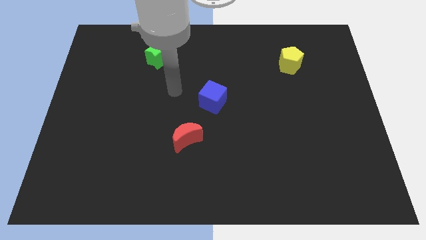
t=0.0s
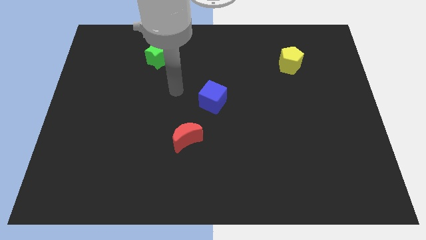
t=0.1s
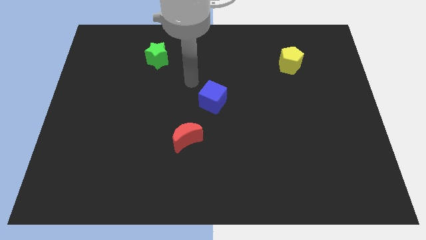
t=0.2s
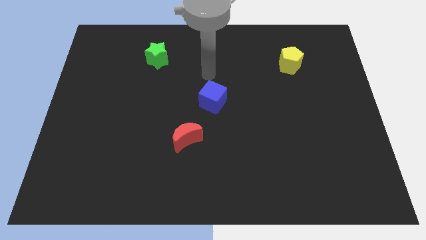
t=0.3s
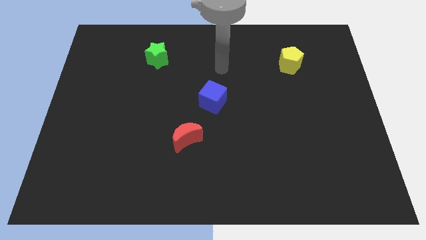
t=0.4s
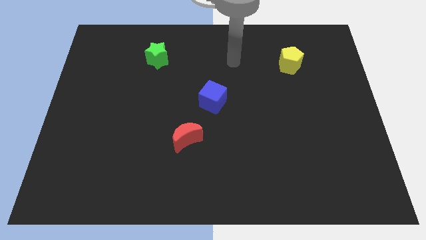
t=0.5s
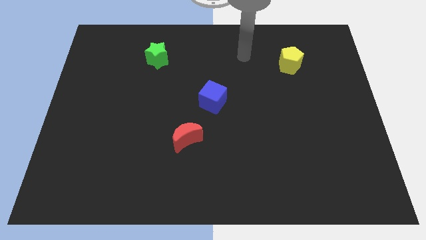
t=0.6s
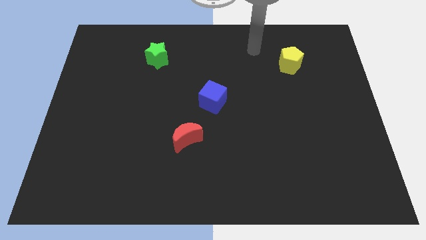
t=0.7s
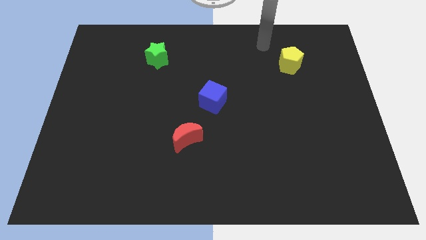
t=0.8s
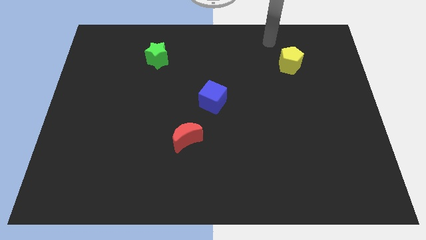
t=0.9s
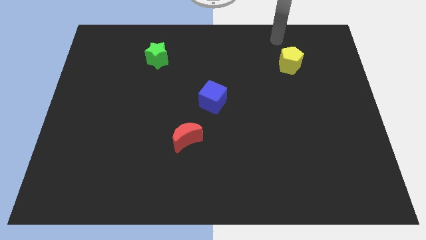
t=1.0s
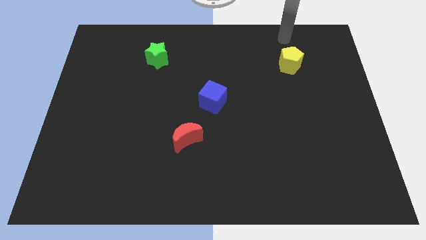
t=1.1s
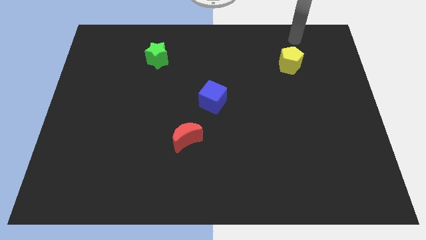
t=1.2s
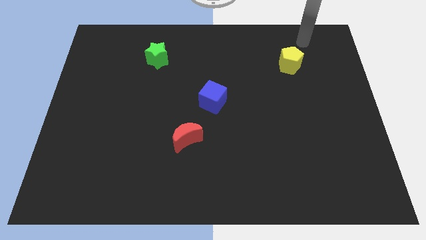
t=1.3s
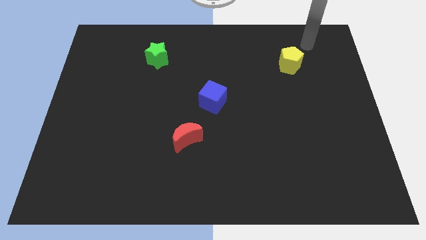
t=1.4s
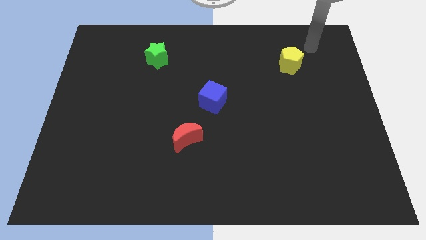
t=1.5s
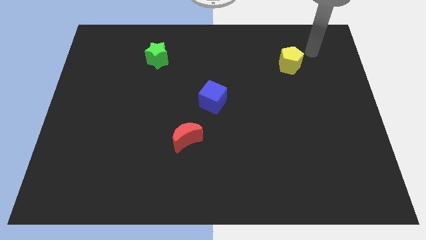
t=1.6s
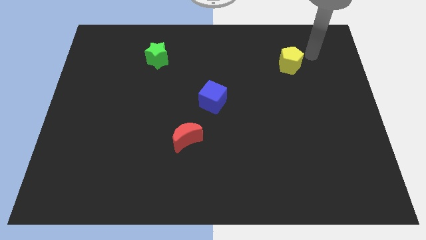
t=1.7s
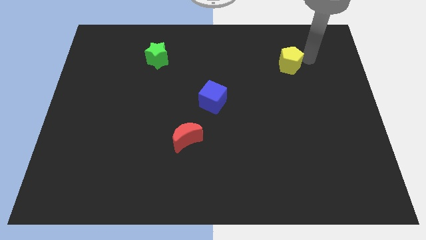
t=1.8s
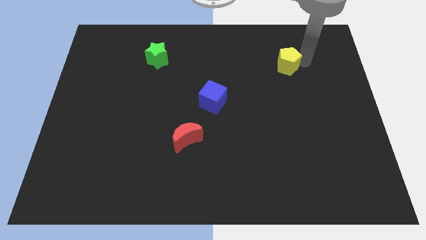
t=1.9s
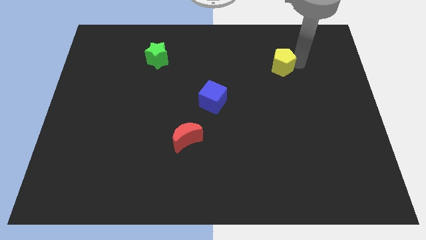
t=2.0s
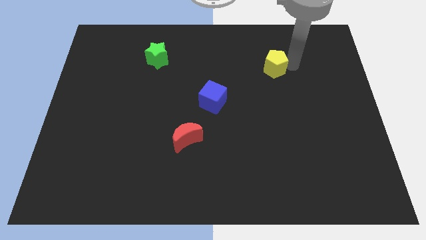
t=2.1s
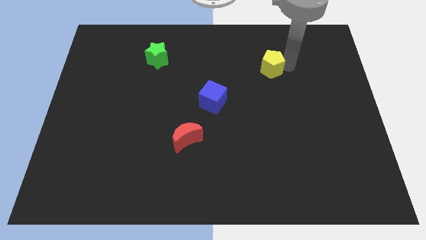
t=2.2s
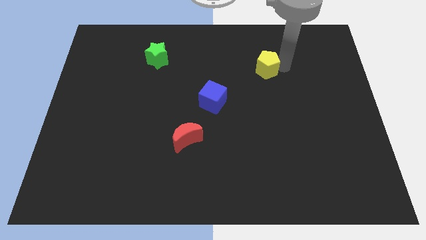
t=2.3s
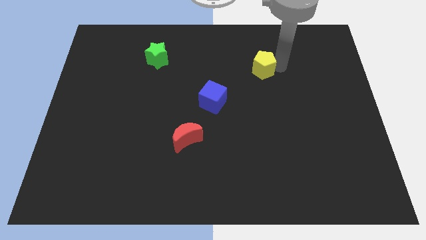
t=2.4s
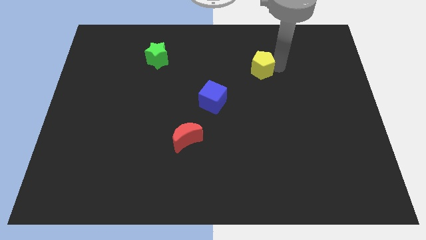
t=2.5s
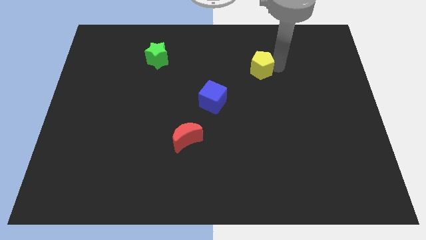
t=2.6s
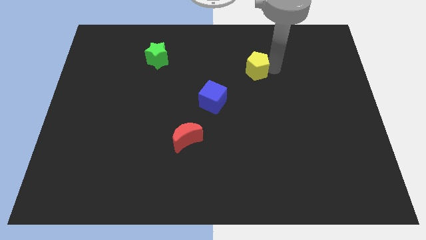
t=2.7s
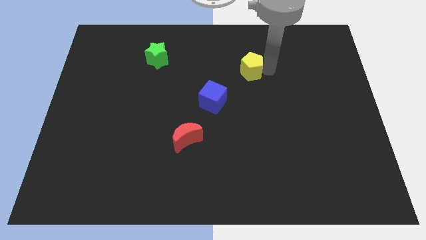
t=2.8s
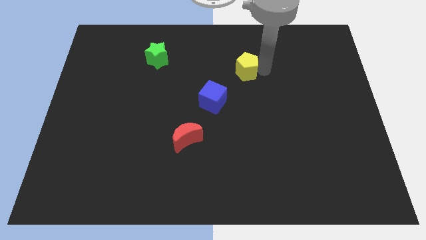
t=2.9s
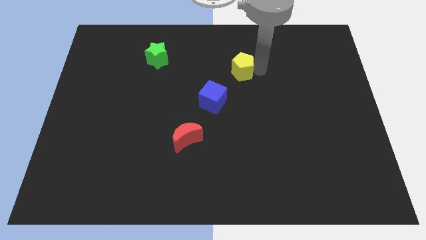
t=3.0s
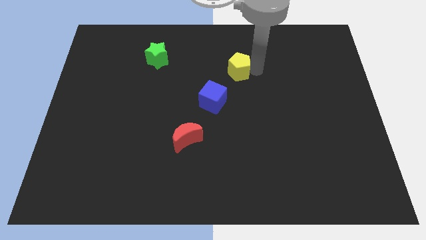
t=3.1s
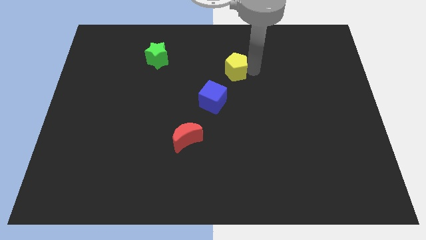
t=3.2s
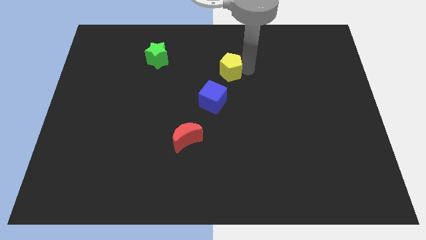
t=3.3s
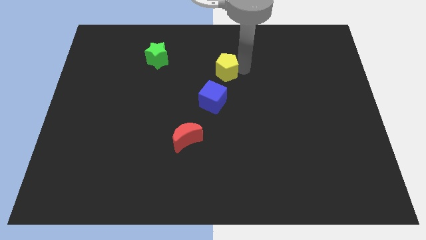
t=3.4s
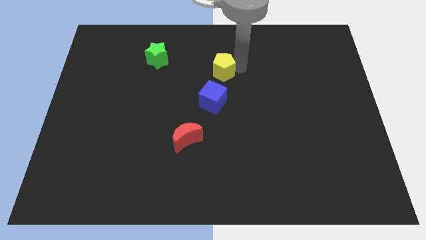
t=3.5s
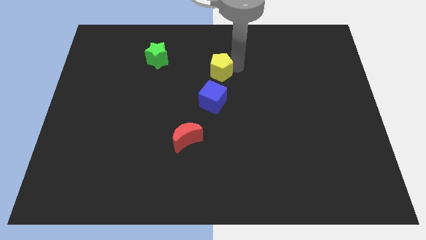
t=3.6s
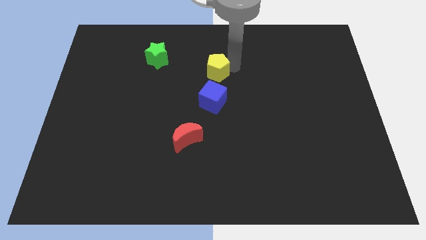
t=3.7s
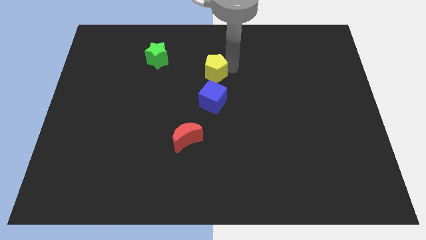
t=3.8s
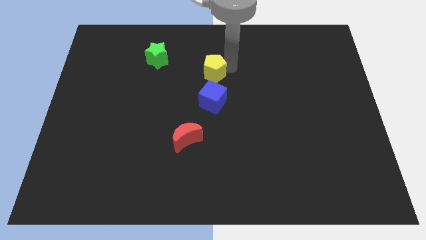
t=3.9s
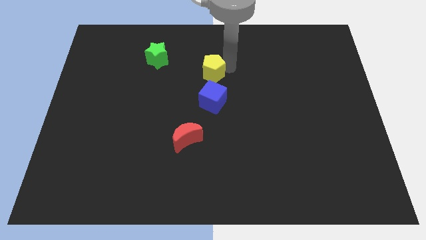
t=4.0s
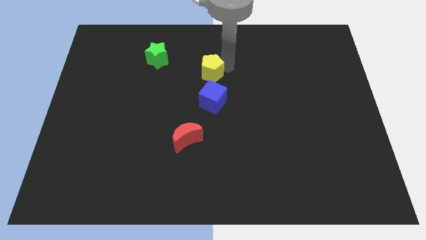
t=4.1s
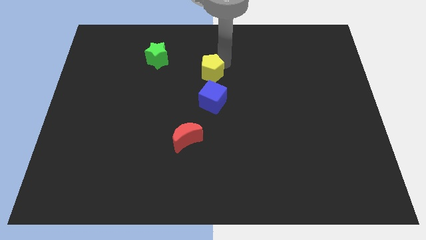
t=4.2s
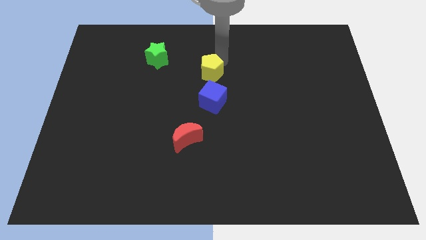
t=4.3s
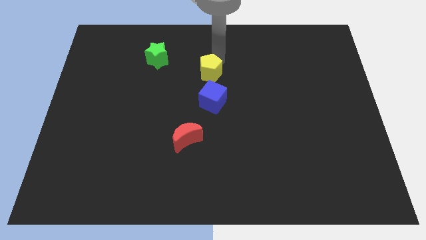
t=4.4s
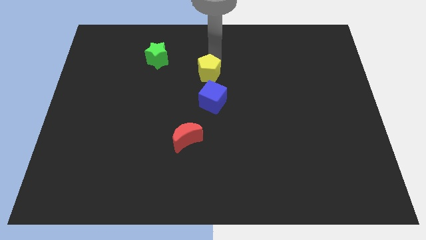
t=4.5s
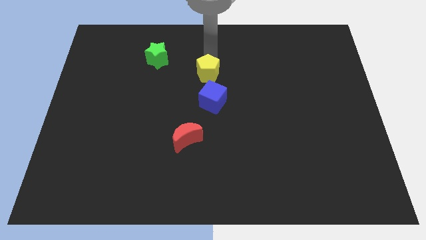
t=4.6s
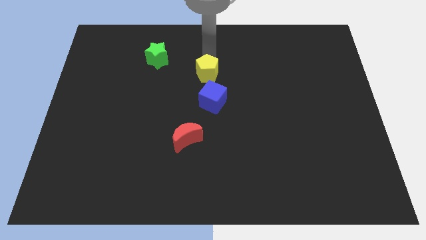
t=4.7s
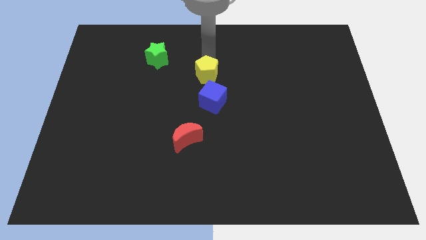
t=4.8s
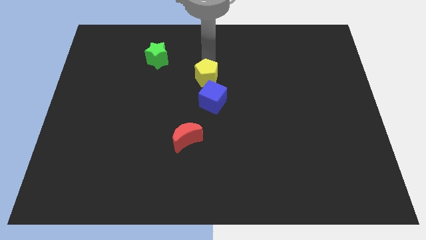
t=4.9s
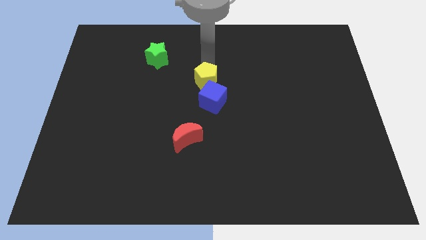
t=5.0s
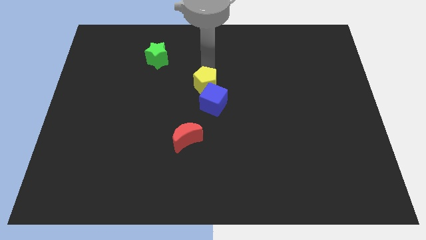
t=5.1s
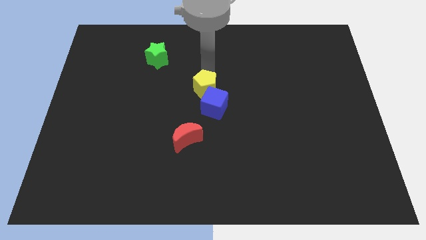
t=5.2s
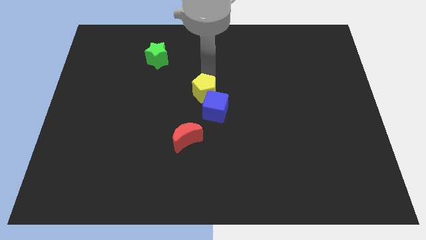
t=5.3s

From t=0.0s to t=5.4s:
slide the pentagon next to the cube

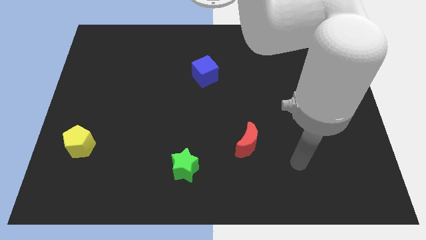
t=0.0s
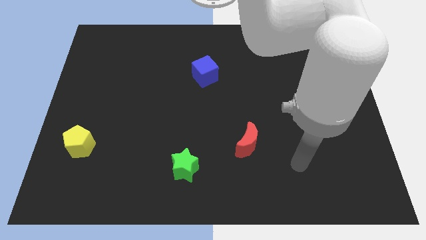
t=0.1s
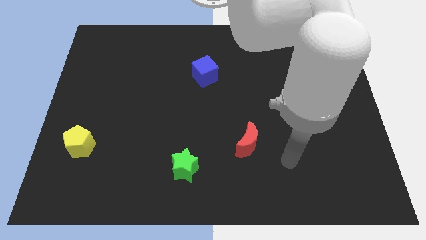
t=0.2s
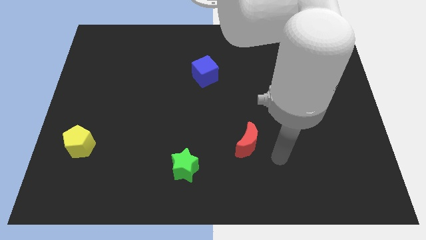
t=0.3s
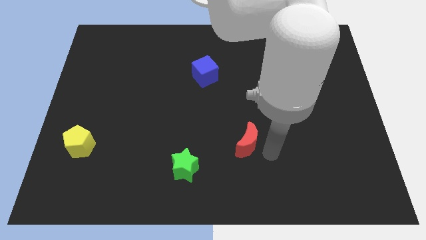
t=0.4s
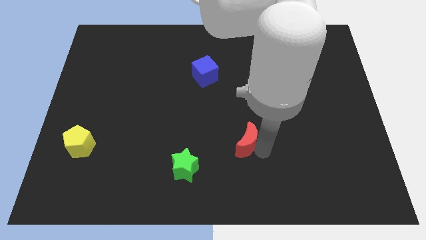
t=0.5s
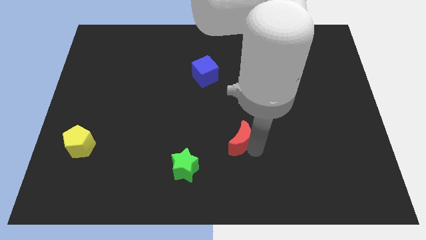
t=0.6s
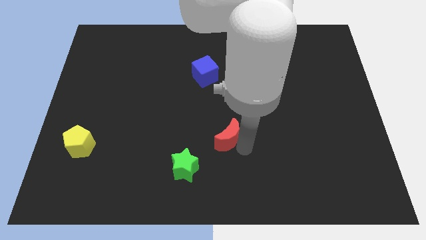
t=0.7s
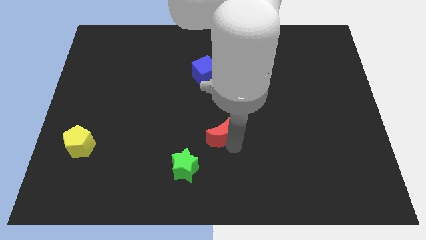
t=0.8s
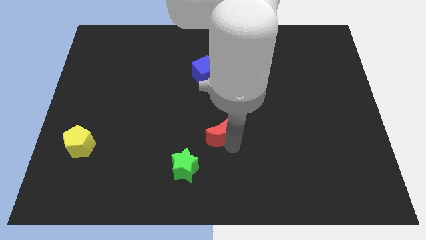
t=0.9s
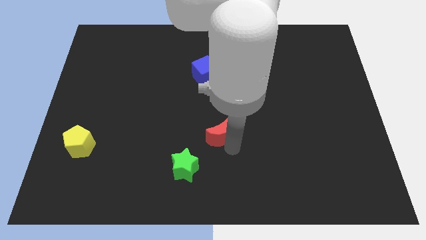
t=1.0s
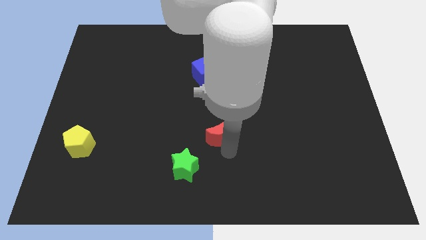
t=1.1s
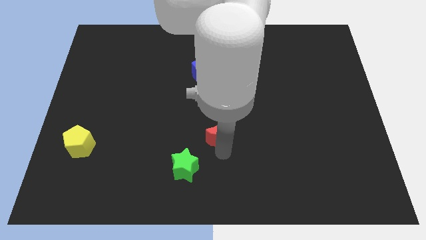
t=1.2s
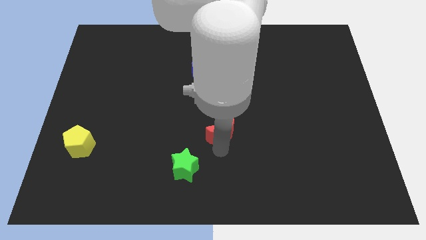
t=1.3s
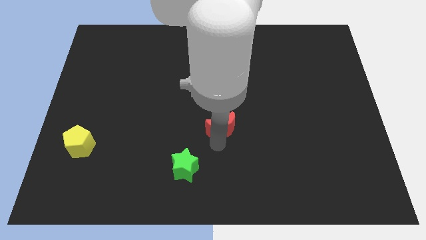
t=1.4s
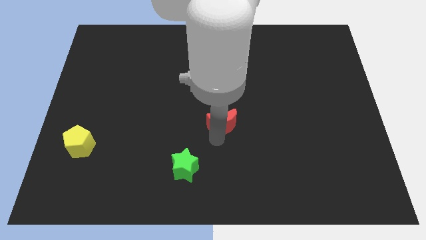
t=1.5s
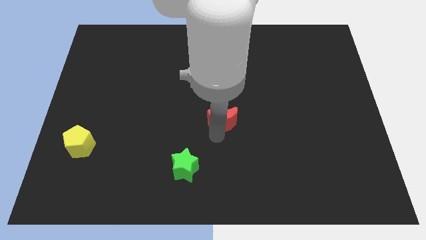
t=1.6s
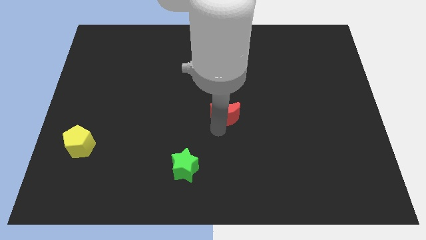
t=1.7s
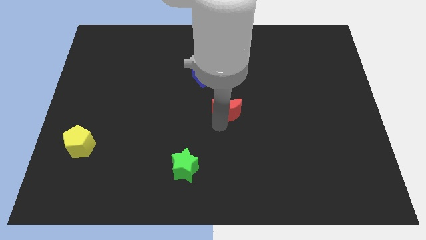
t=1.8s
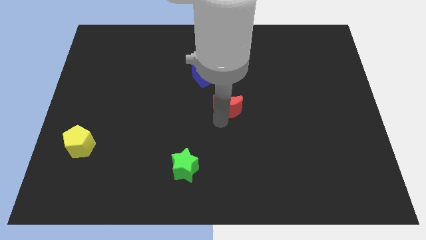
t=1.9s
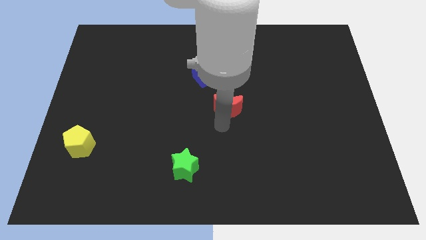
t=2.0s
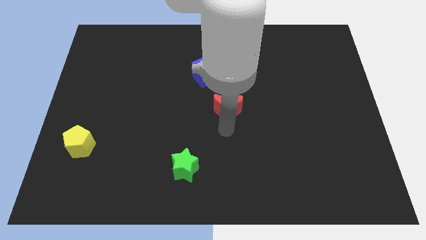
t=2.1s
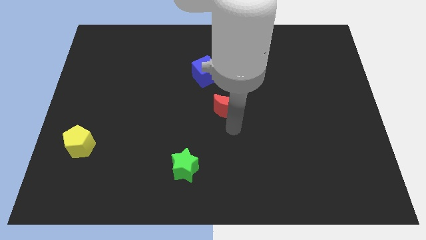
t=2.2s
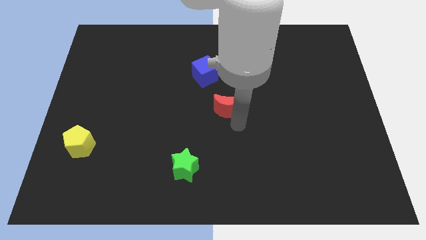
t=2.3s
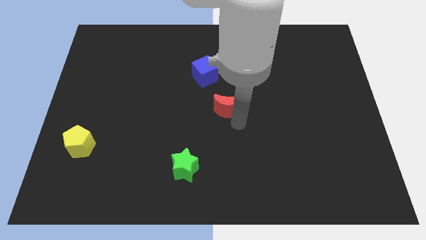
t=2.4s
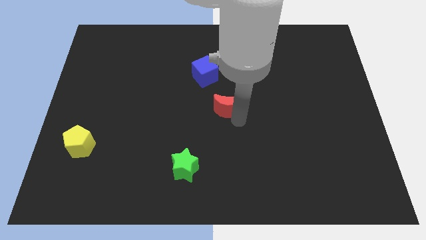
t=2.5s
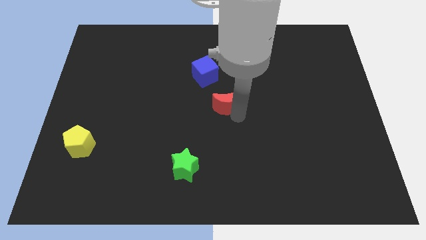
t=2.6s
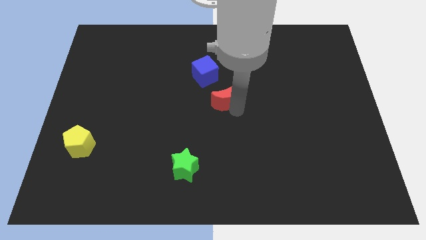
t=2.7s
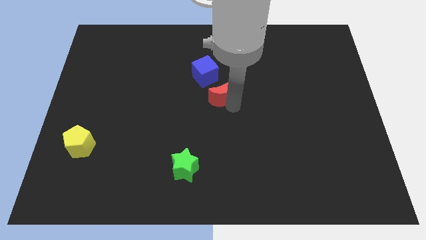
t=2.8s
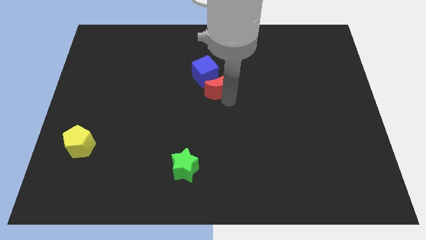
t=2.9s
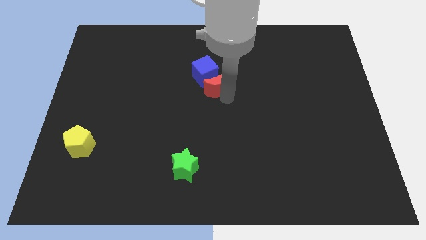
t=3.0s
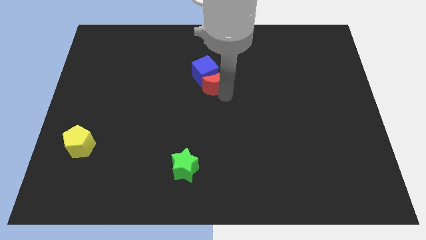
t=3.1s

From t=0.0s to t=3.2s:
move the red block towards the cube
